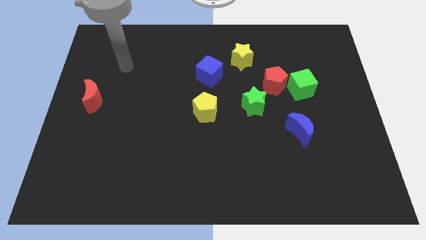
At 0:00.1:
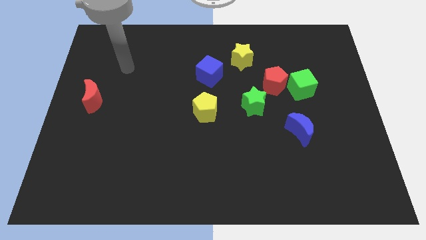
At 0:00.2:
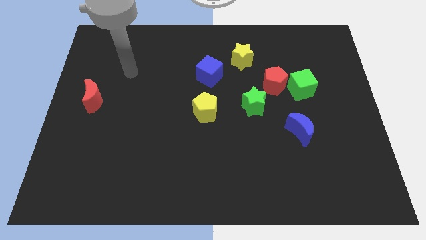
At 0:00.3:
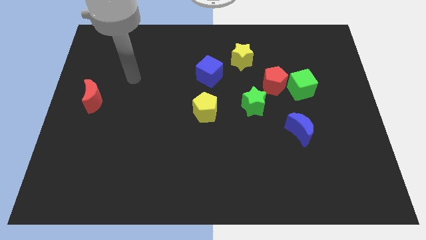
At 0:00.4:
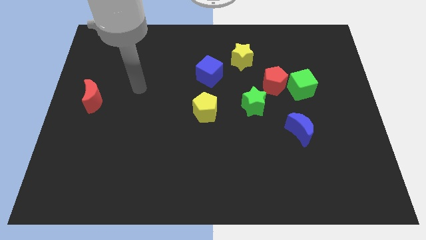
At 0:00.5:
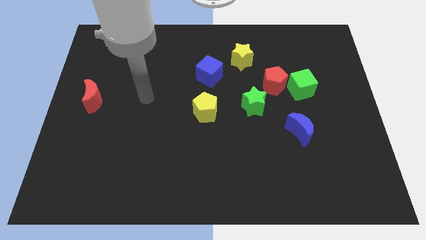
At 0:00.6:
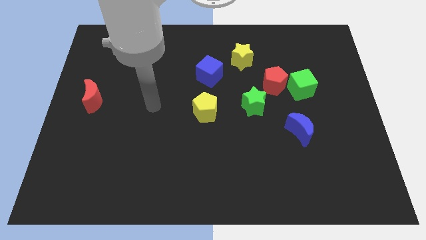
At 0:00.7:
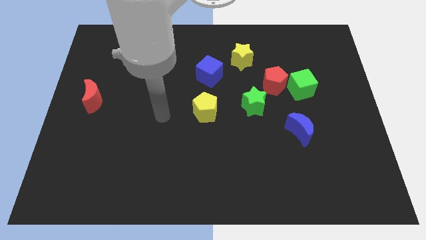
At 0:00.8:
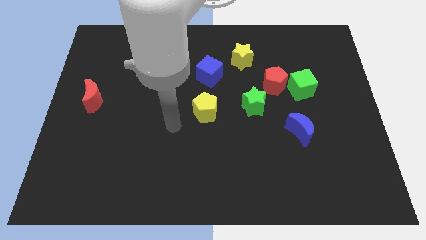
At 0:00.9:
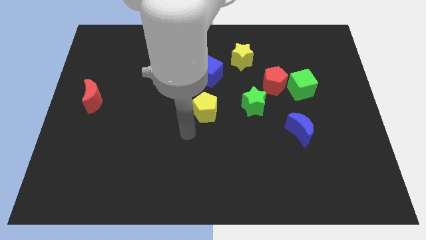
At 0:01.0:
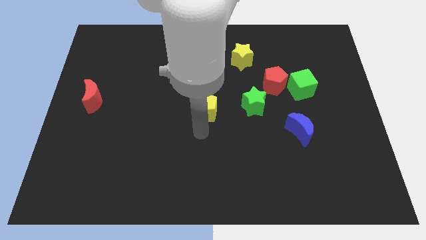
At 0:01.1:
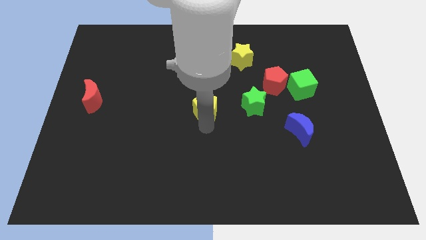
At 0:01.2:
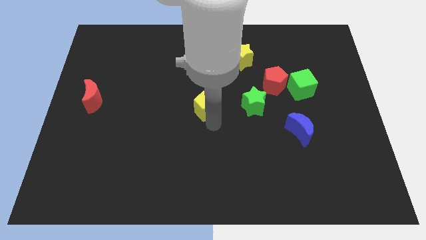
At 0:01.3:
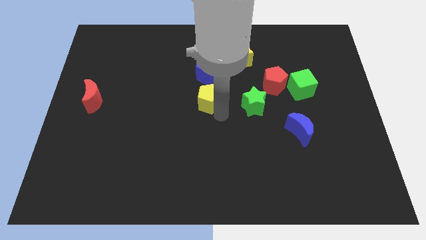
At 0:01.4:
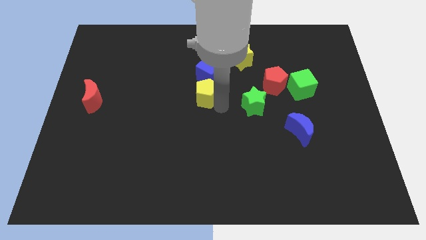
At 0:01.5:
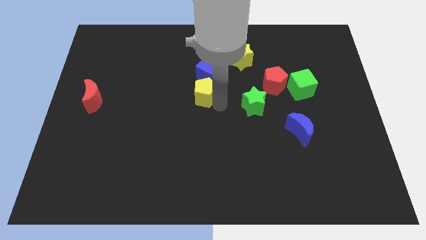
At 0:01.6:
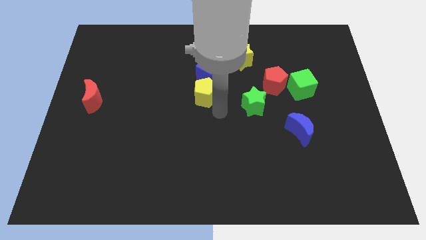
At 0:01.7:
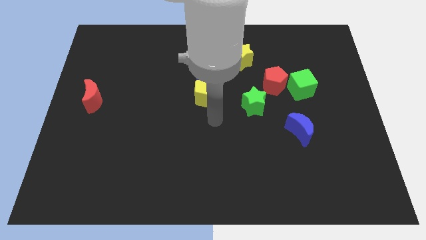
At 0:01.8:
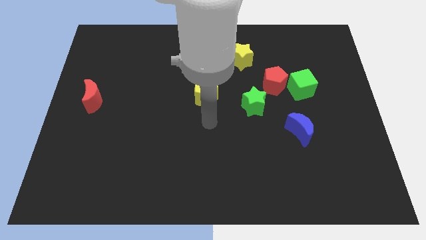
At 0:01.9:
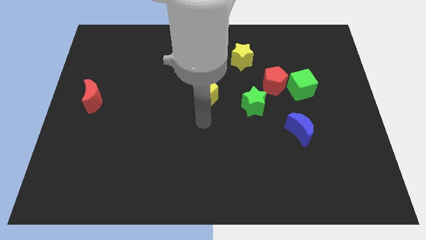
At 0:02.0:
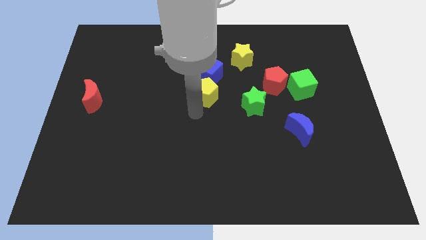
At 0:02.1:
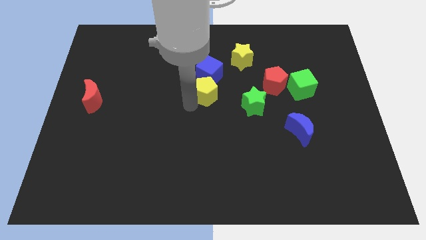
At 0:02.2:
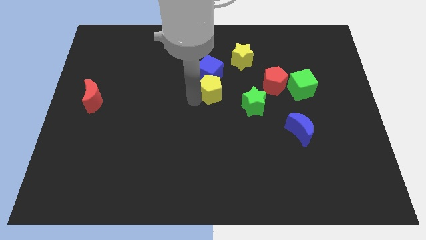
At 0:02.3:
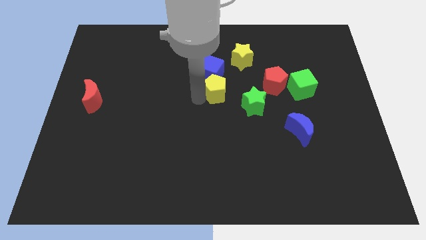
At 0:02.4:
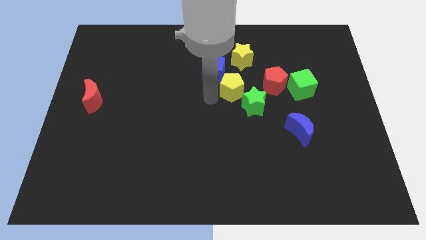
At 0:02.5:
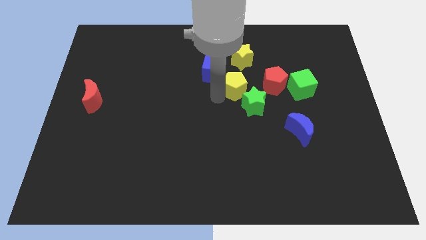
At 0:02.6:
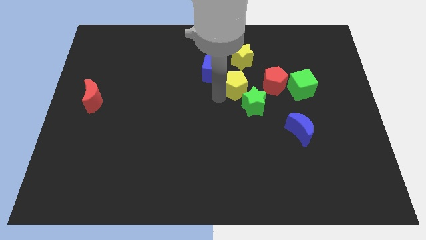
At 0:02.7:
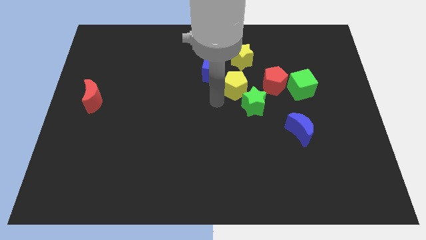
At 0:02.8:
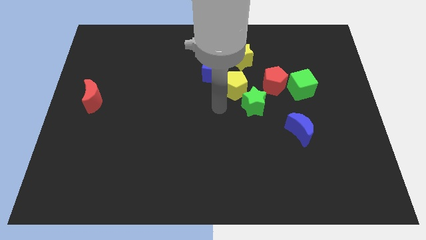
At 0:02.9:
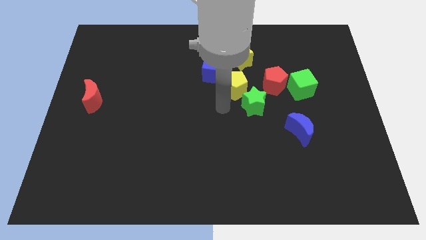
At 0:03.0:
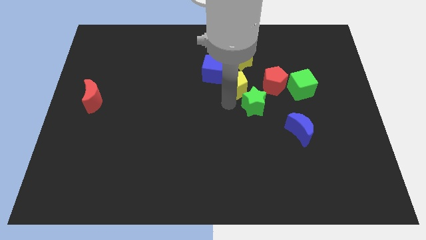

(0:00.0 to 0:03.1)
place the yellow pentagon in between blue cube and green star

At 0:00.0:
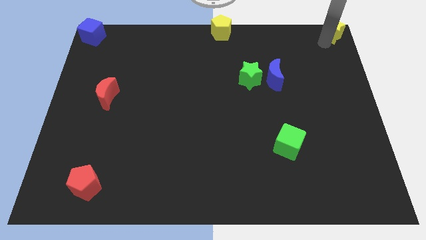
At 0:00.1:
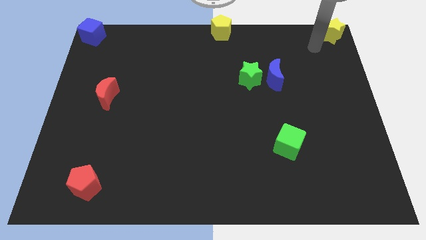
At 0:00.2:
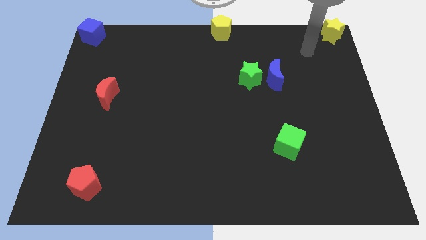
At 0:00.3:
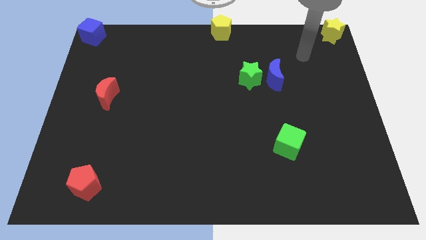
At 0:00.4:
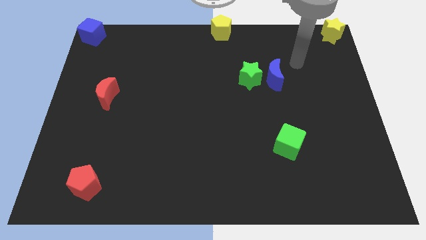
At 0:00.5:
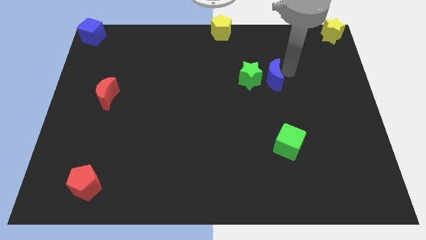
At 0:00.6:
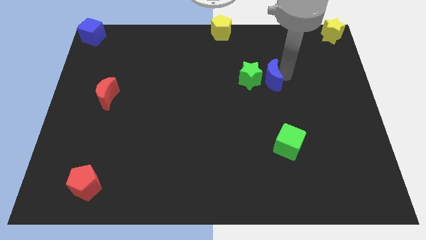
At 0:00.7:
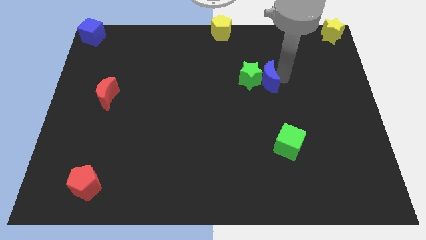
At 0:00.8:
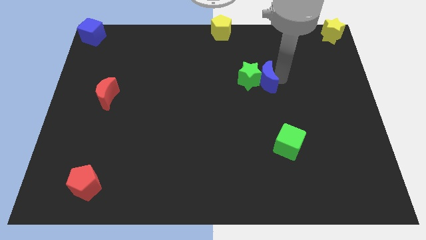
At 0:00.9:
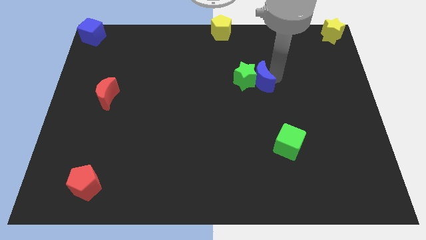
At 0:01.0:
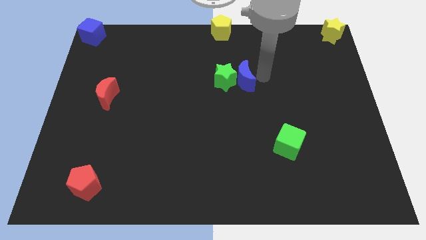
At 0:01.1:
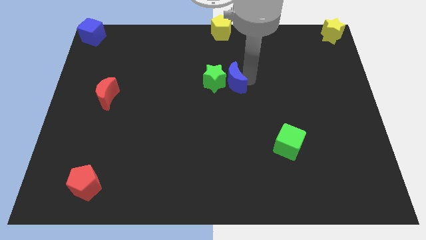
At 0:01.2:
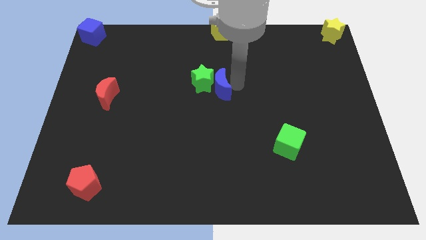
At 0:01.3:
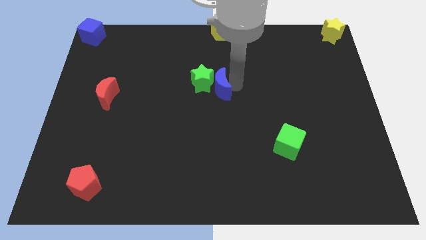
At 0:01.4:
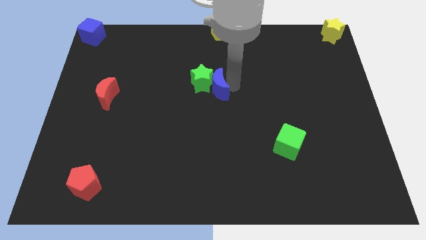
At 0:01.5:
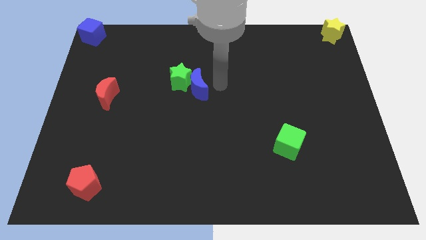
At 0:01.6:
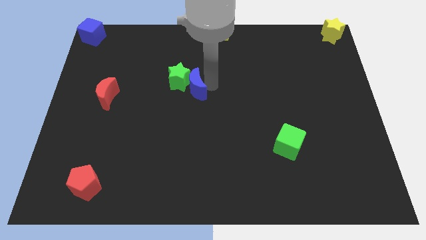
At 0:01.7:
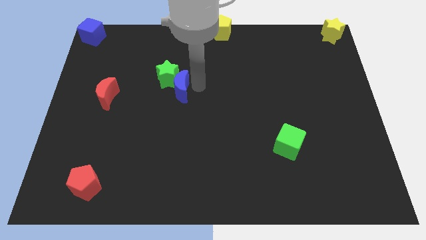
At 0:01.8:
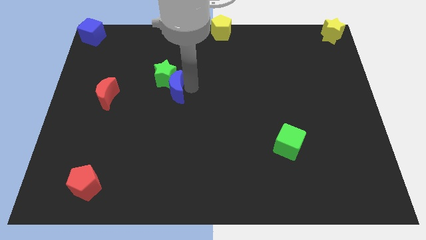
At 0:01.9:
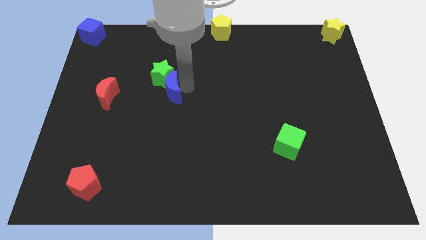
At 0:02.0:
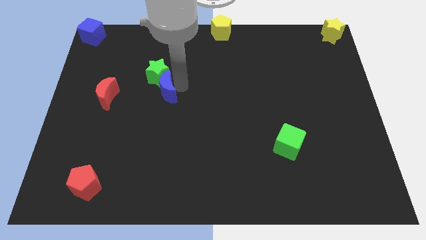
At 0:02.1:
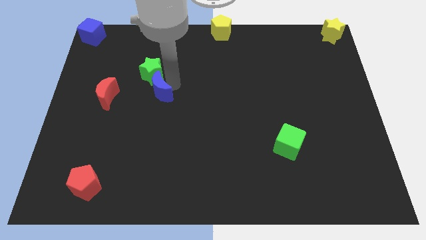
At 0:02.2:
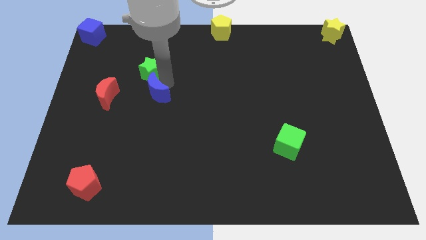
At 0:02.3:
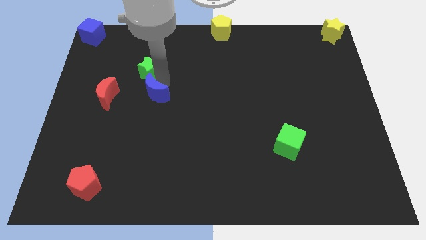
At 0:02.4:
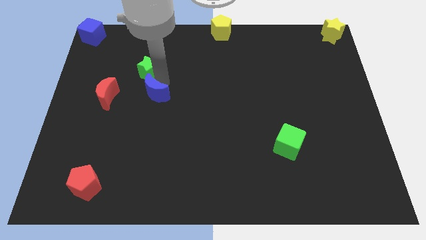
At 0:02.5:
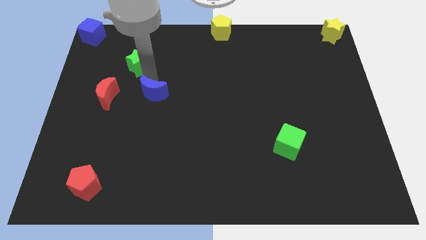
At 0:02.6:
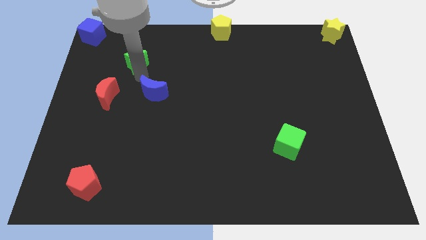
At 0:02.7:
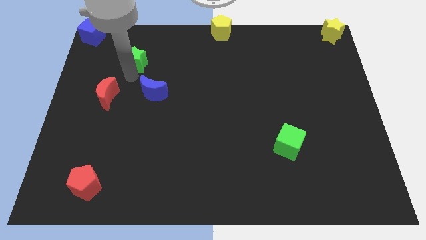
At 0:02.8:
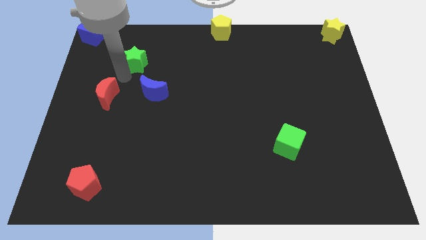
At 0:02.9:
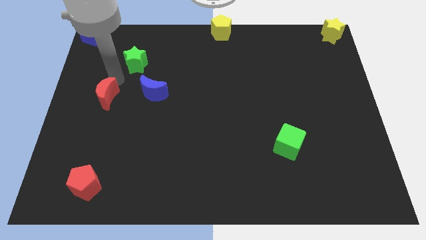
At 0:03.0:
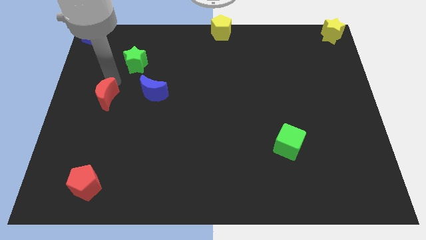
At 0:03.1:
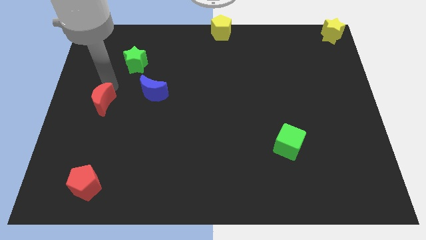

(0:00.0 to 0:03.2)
push the blue crescent and green cube to the left and separate them

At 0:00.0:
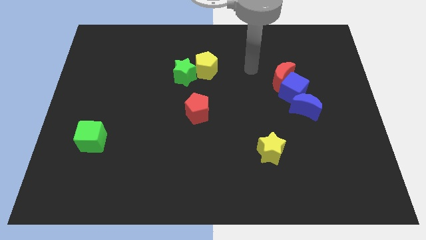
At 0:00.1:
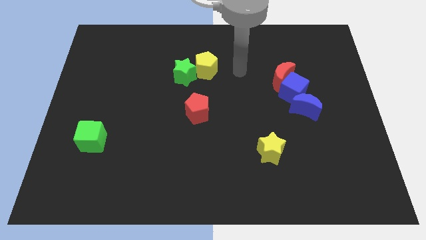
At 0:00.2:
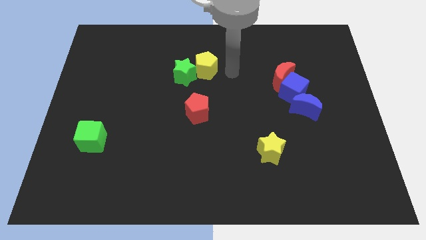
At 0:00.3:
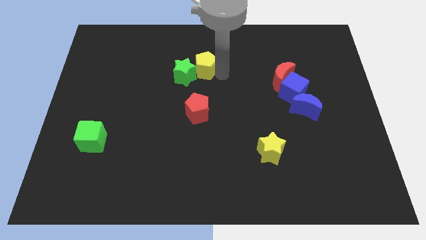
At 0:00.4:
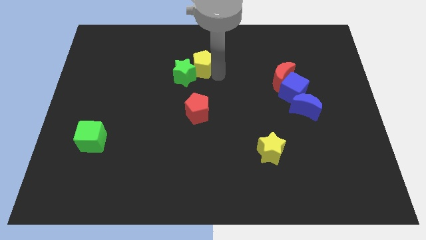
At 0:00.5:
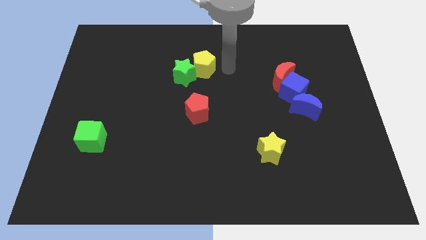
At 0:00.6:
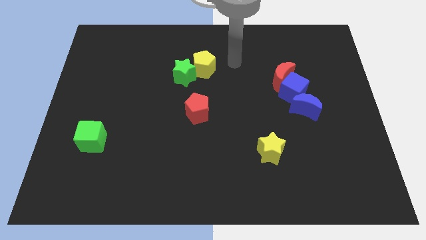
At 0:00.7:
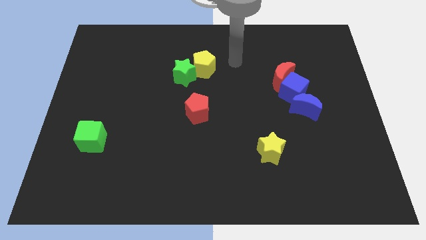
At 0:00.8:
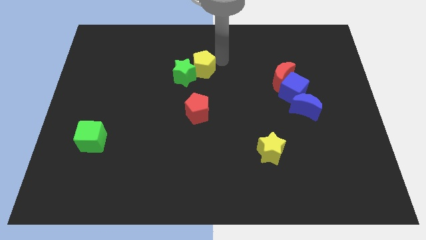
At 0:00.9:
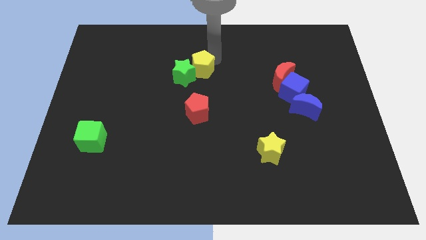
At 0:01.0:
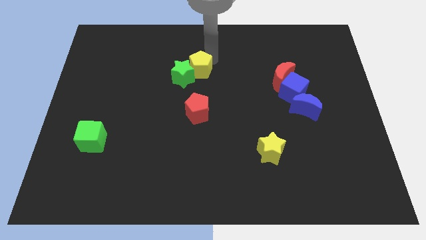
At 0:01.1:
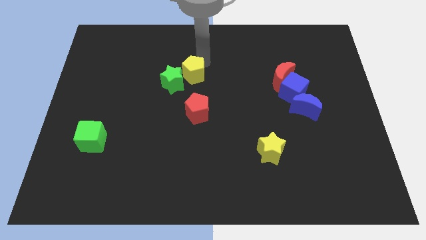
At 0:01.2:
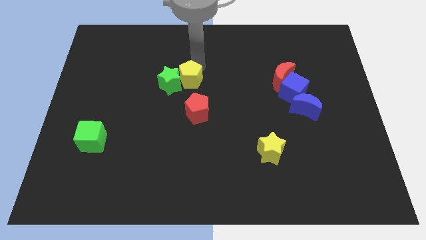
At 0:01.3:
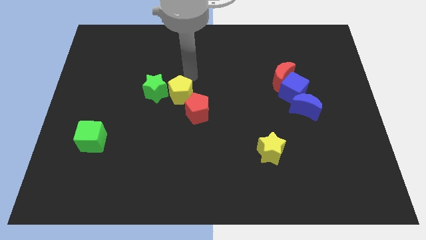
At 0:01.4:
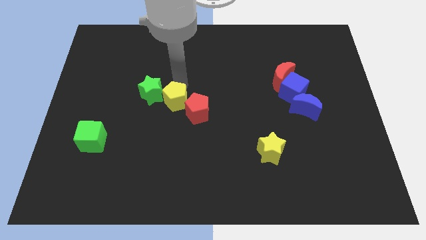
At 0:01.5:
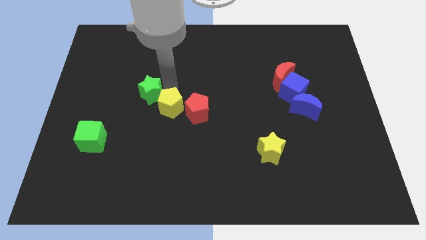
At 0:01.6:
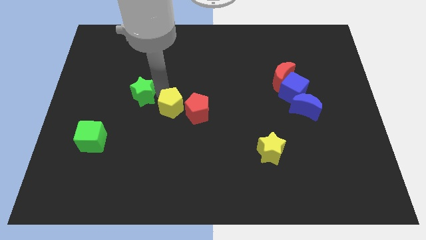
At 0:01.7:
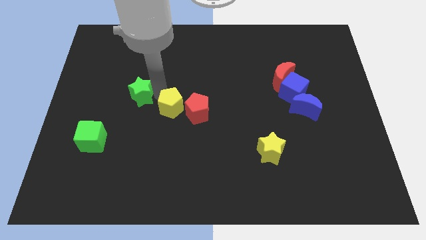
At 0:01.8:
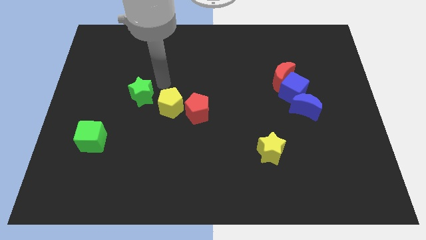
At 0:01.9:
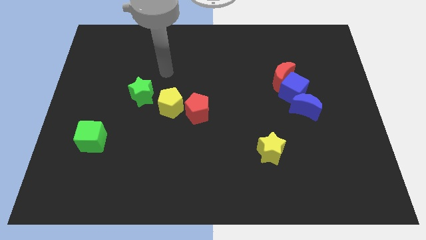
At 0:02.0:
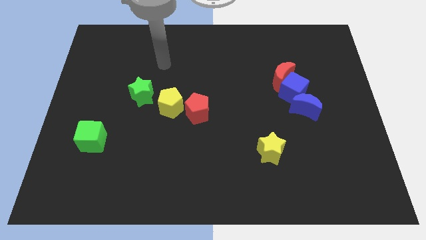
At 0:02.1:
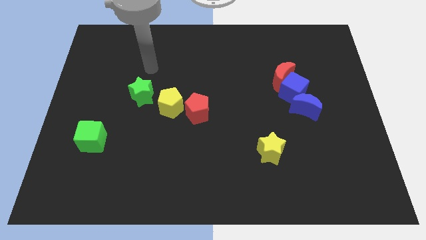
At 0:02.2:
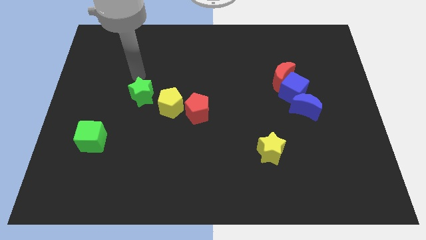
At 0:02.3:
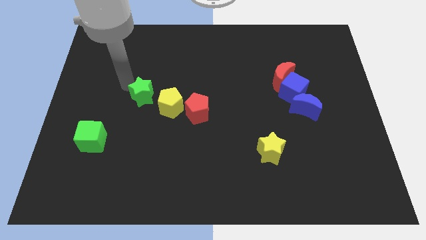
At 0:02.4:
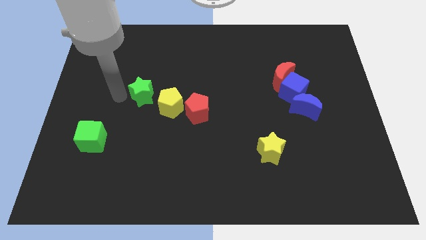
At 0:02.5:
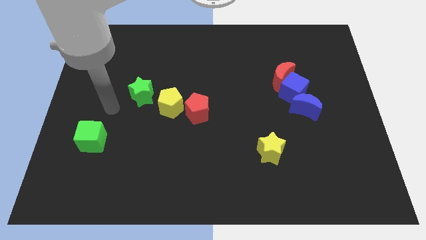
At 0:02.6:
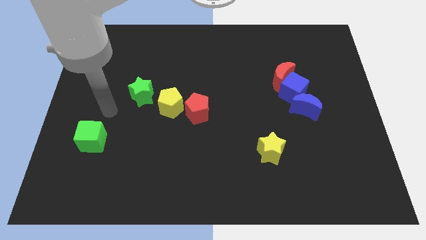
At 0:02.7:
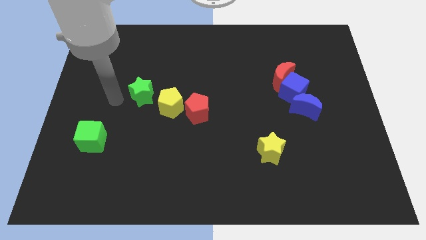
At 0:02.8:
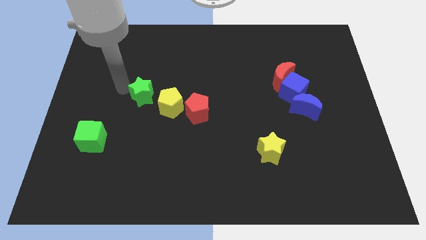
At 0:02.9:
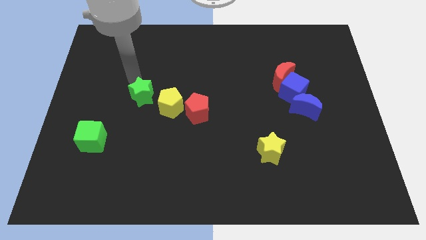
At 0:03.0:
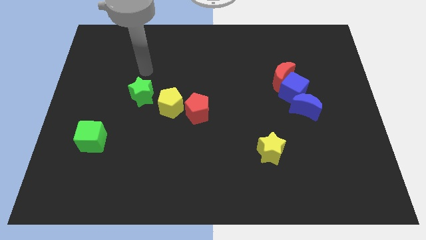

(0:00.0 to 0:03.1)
place the yellow pentagon between the red pentagon and the green star
